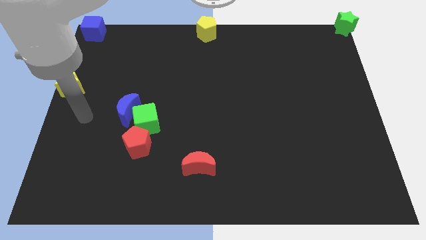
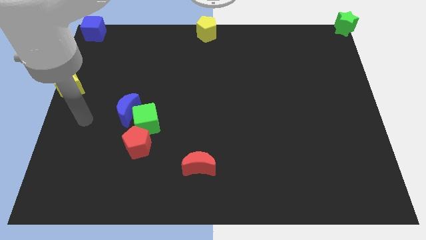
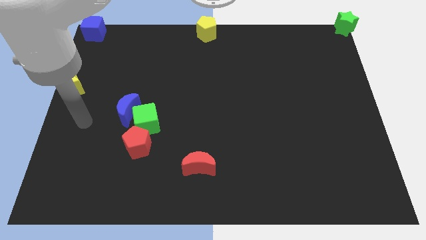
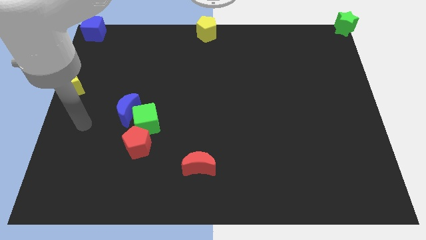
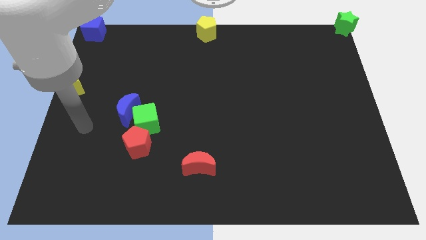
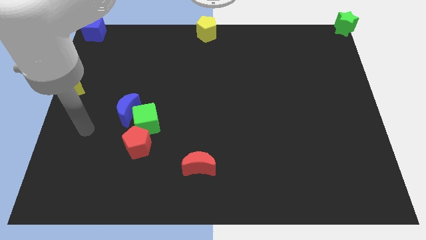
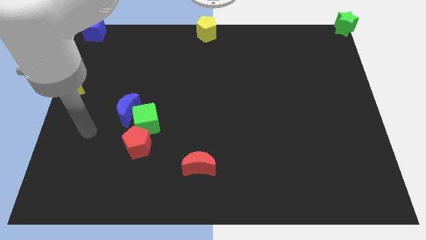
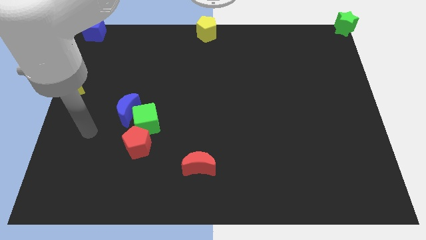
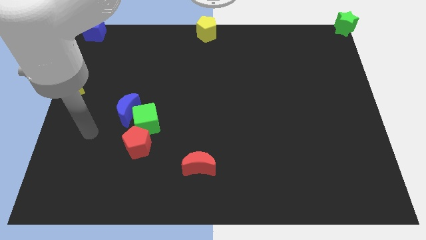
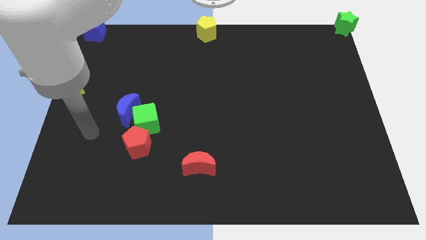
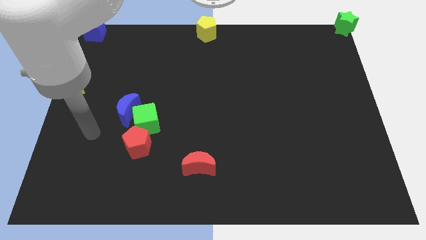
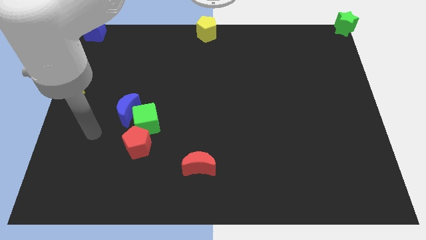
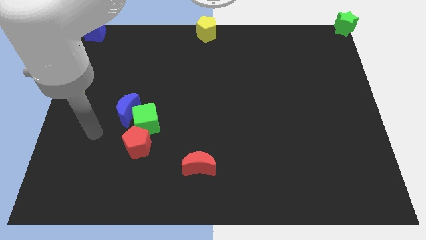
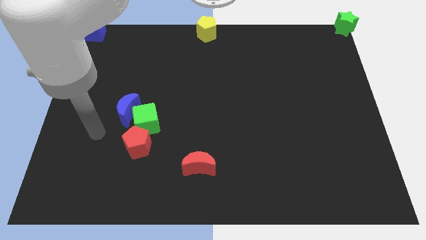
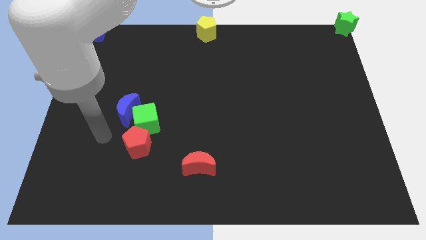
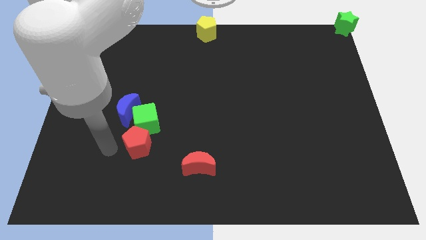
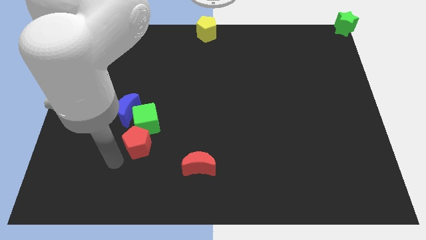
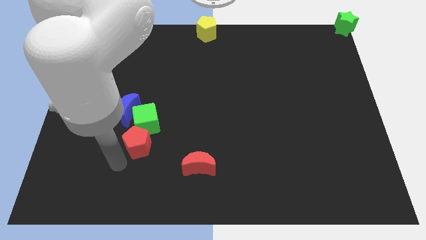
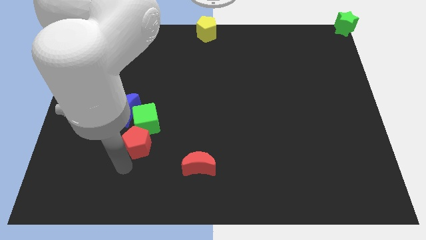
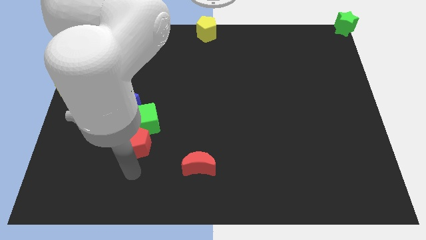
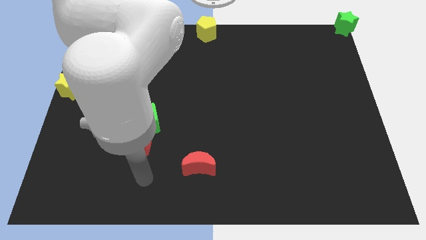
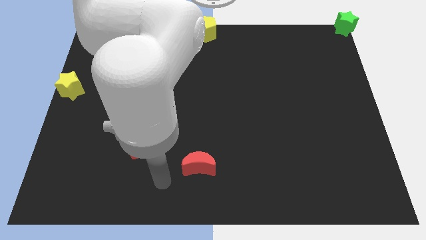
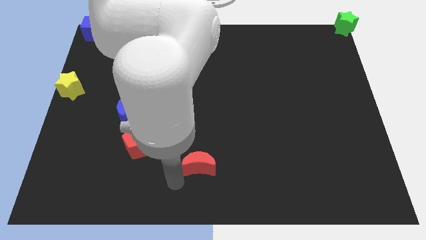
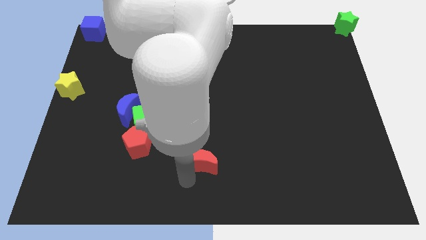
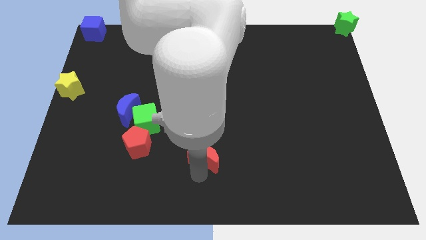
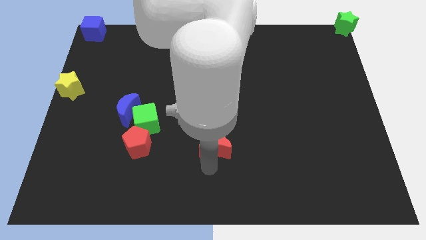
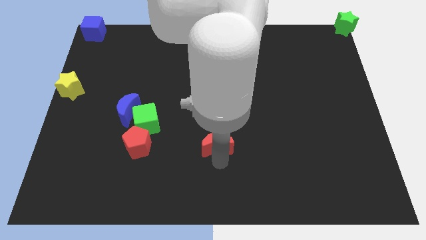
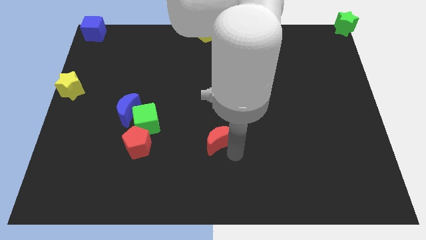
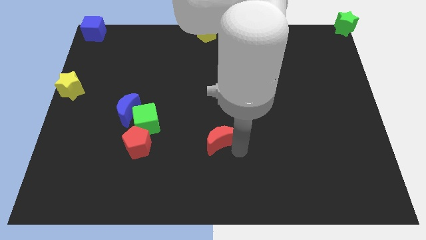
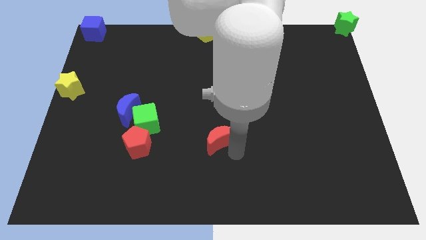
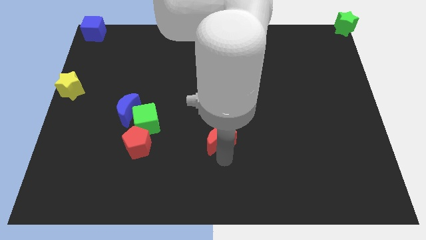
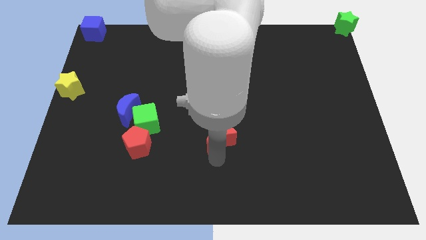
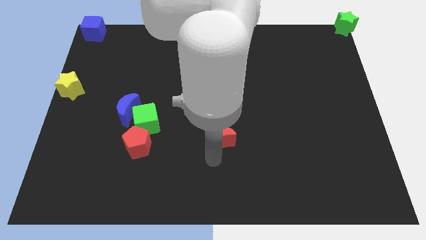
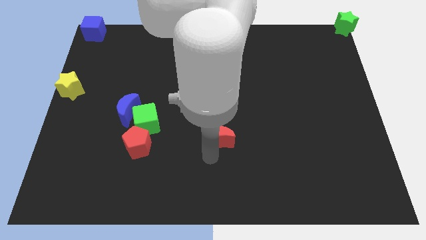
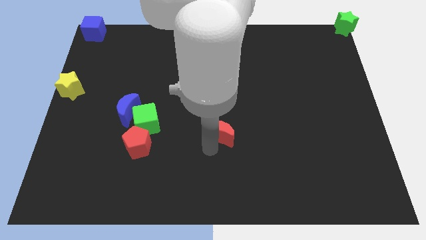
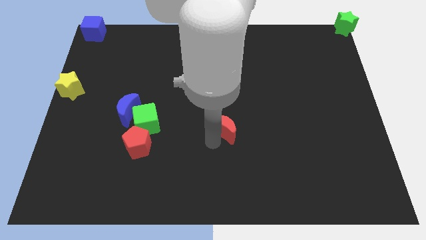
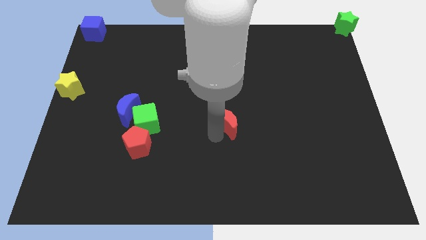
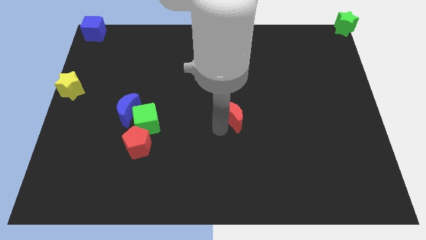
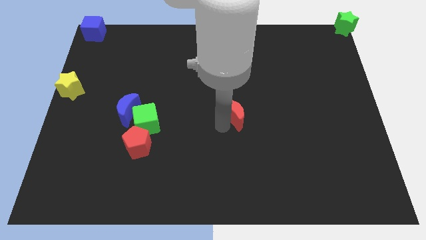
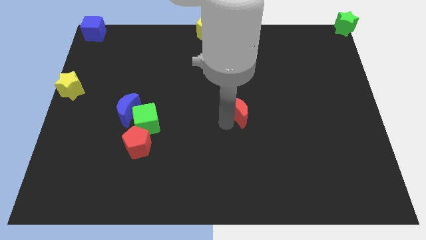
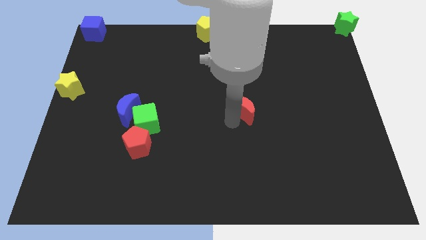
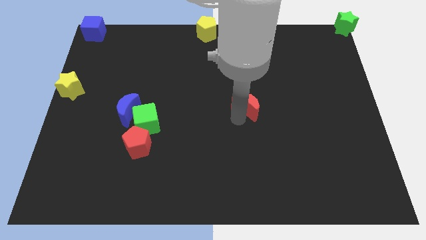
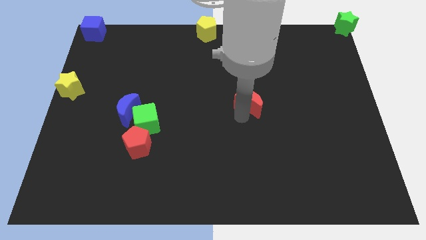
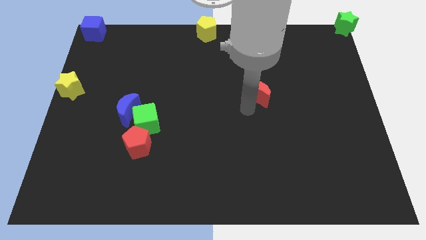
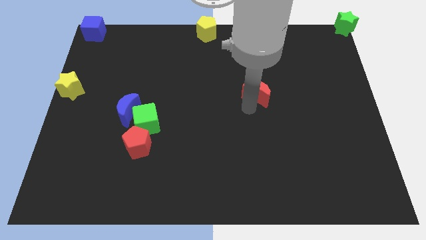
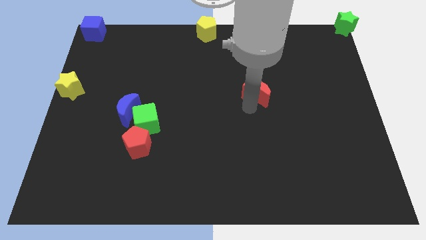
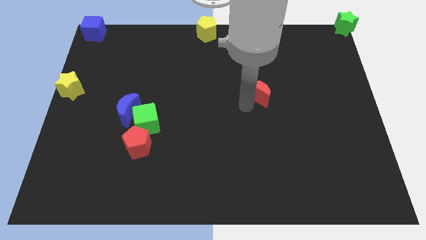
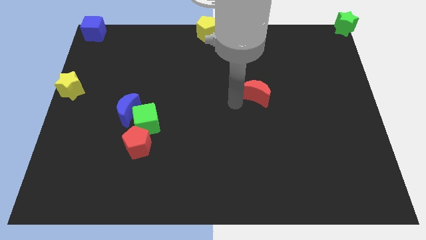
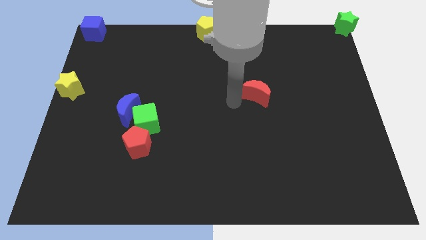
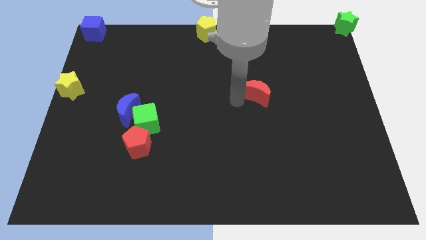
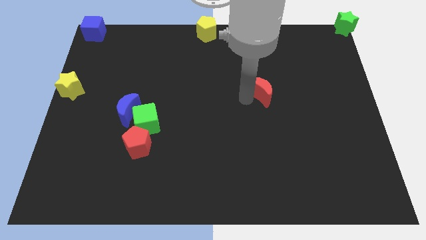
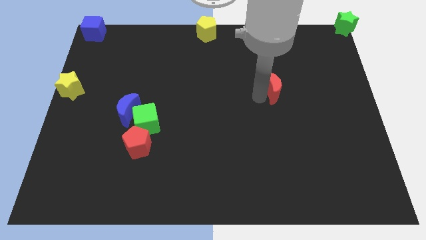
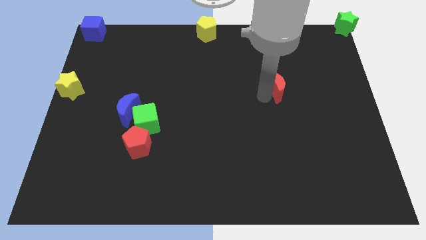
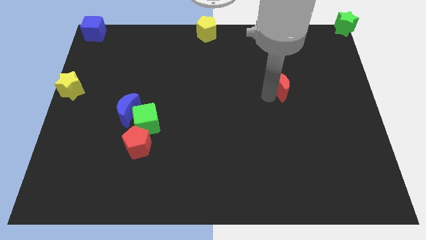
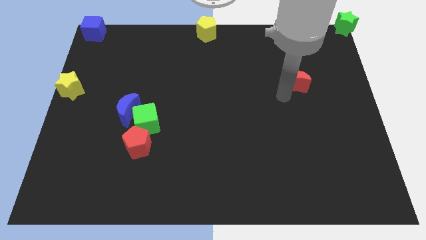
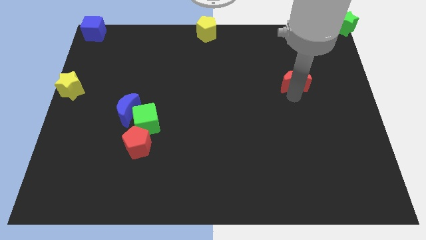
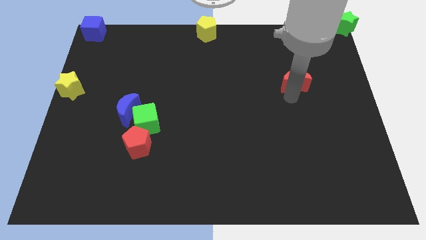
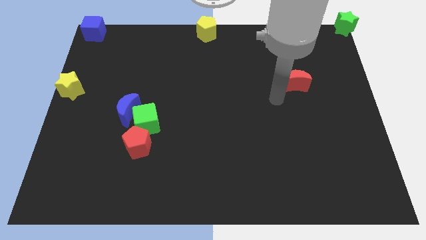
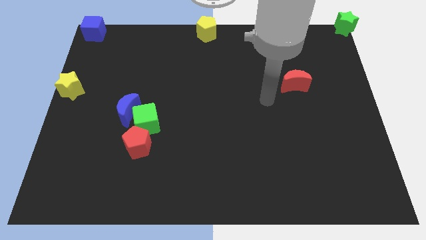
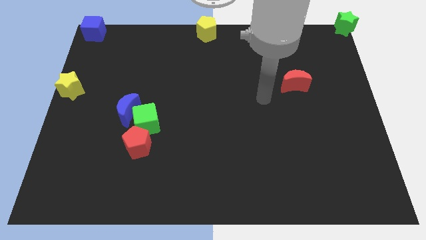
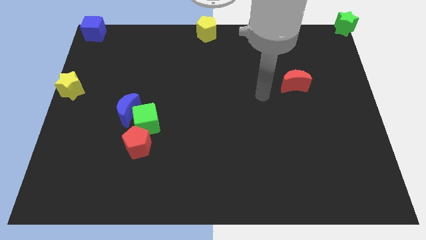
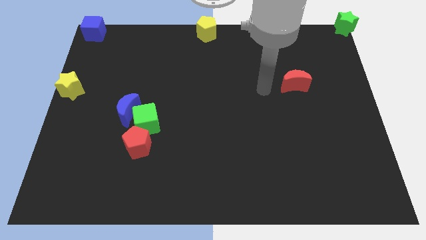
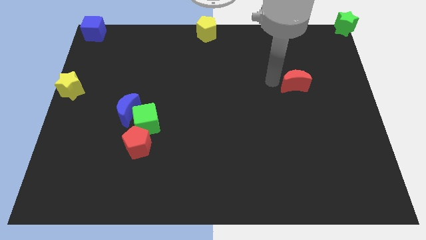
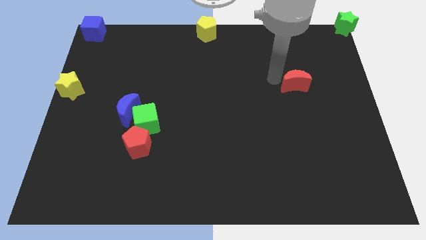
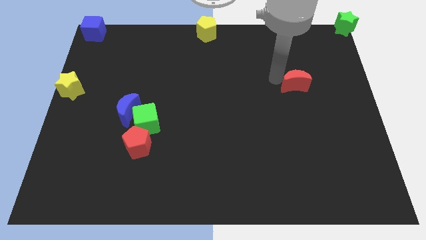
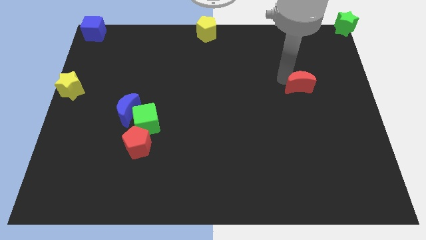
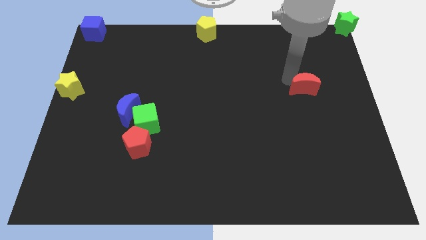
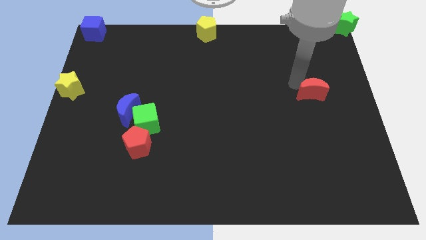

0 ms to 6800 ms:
push the red crescent to the right side of the table

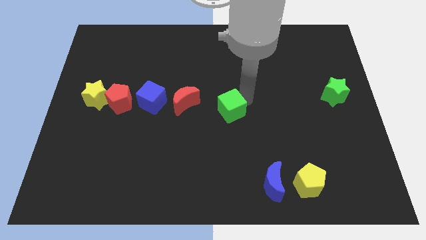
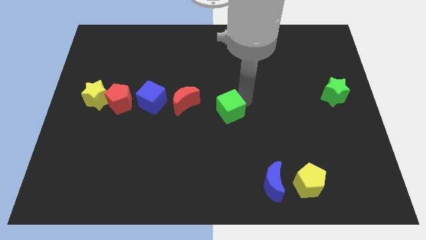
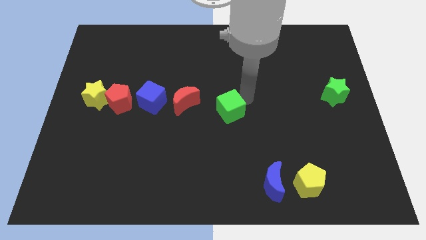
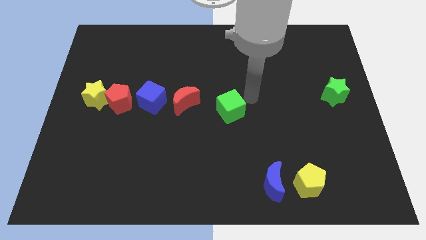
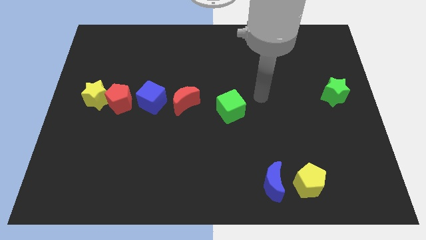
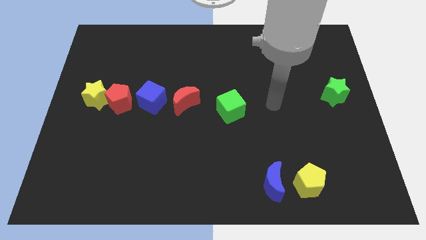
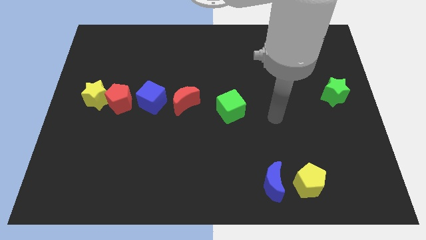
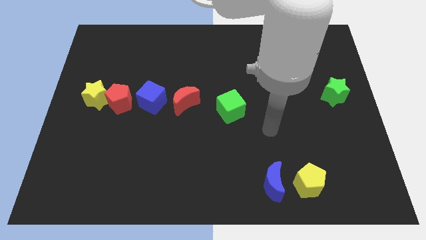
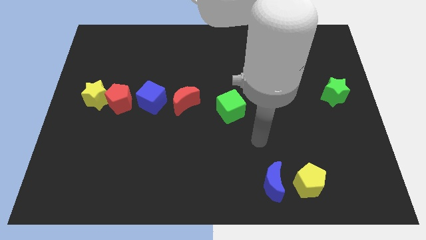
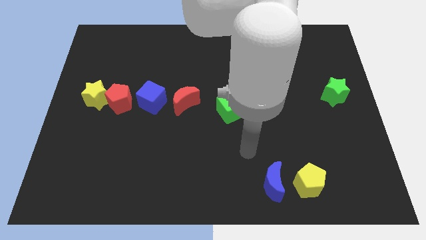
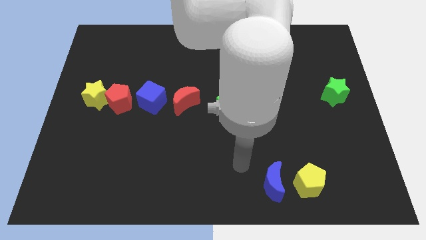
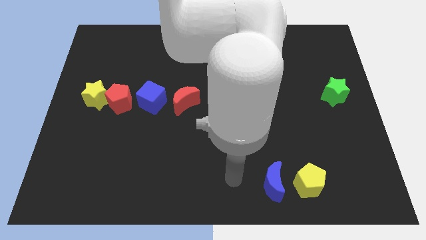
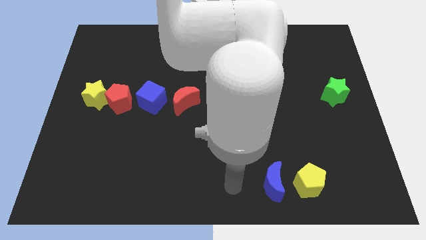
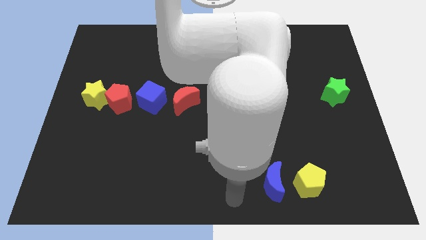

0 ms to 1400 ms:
move the arm away from the green cube

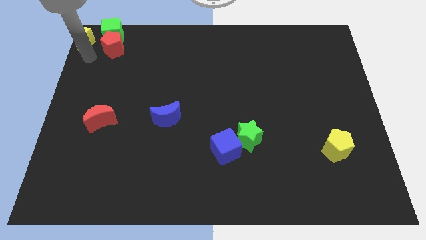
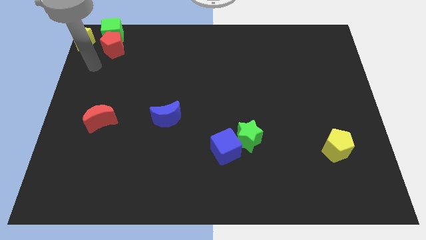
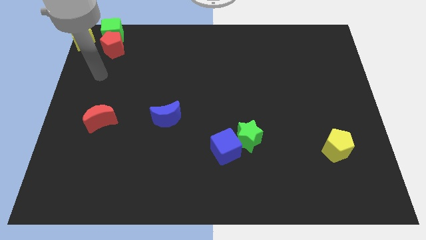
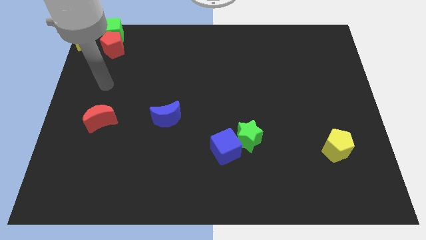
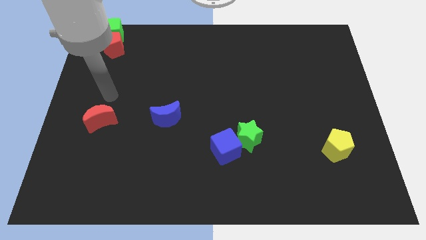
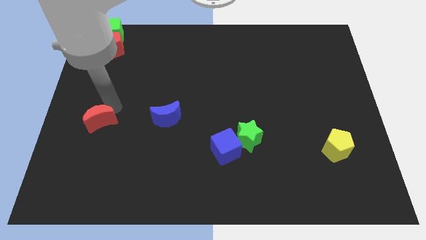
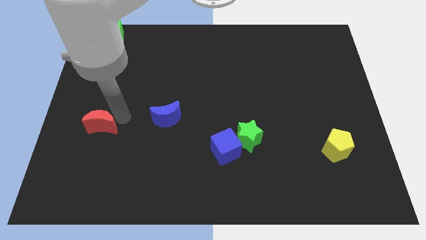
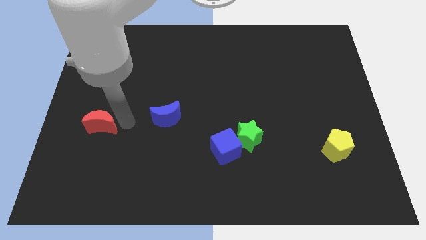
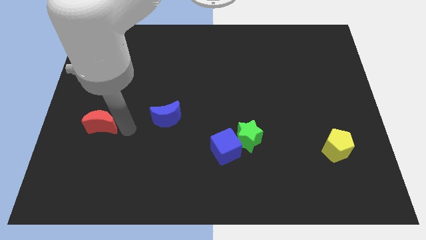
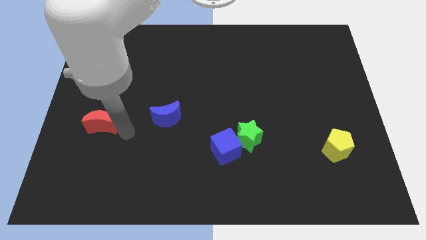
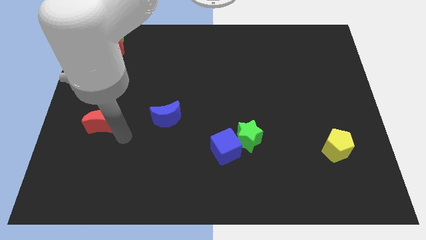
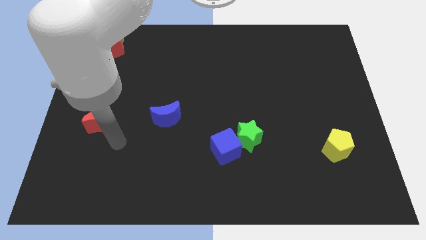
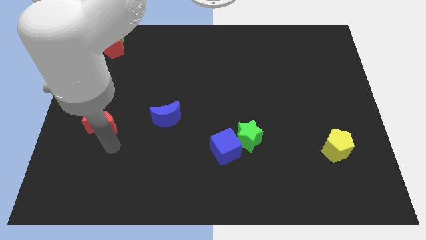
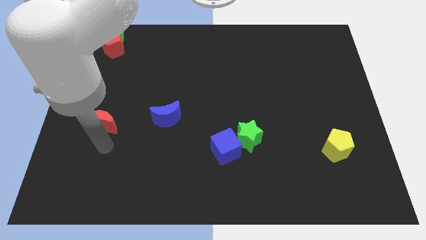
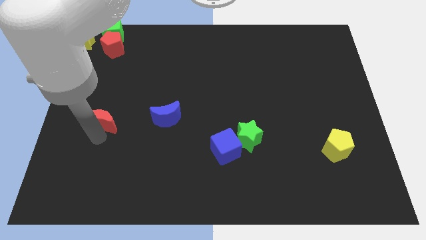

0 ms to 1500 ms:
move the arm towards the red crescent
